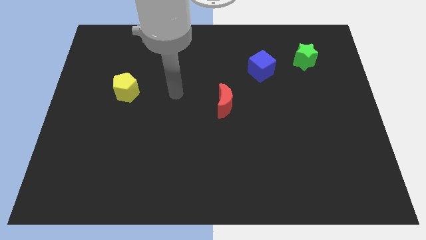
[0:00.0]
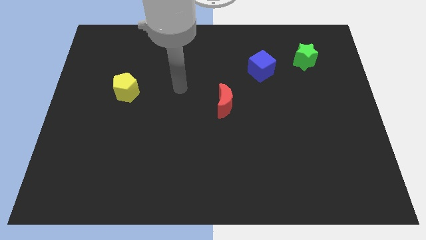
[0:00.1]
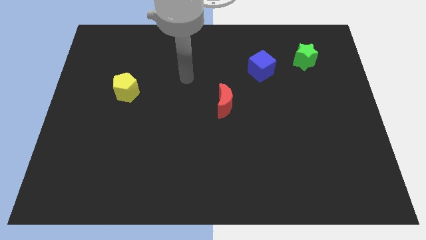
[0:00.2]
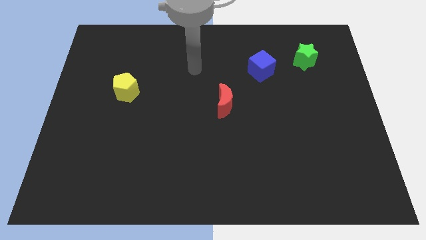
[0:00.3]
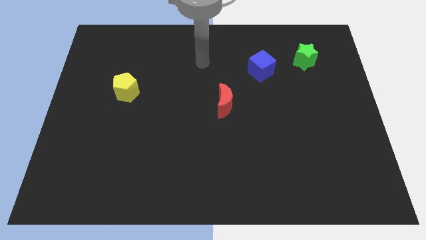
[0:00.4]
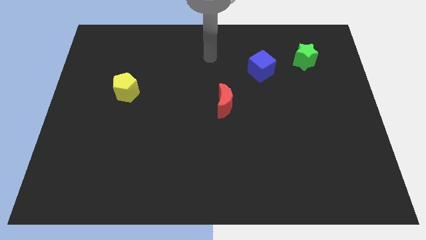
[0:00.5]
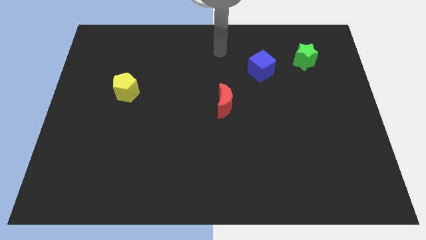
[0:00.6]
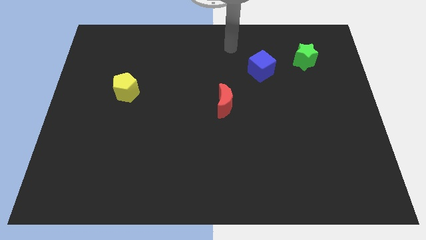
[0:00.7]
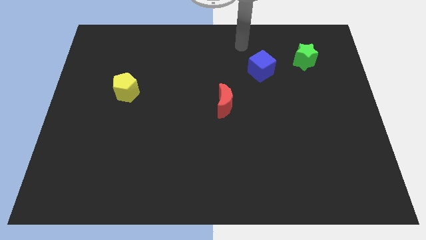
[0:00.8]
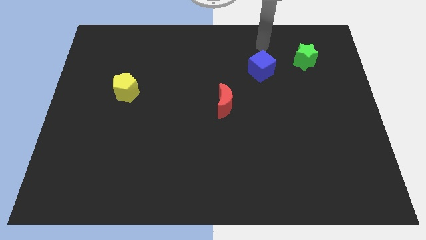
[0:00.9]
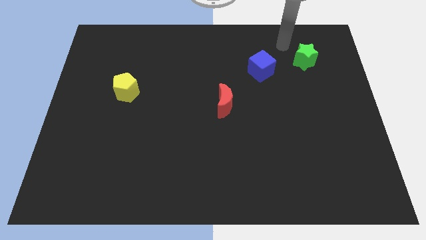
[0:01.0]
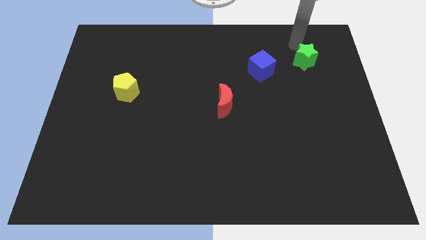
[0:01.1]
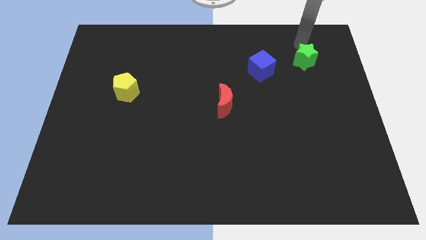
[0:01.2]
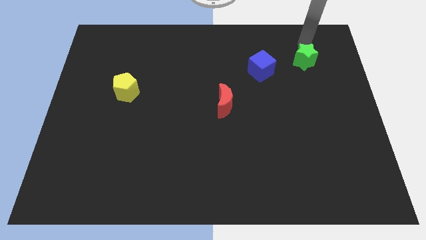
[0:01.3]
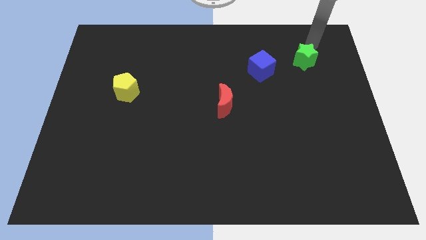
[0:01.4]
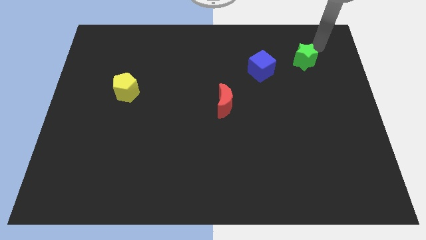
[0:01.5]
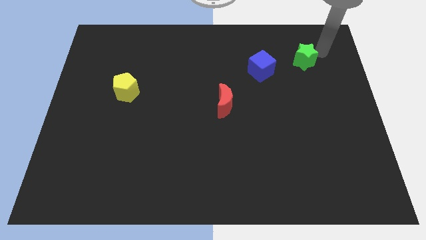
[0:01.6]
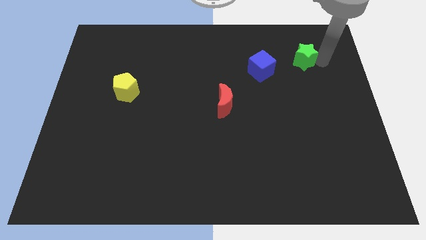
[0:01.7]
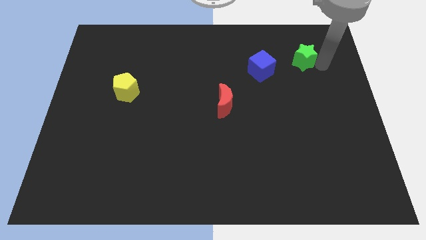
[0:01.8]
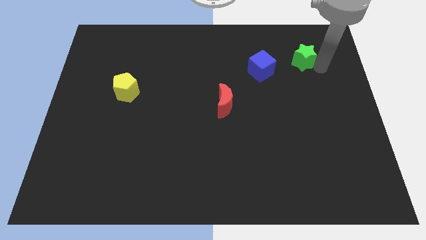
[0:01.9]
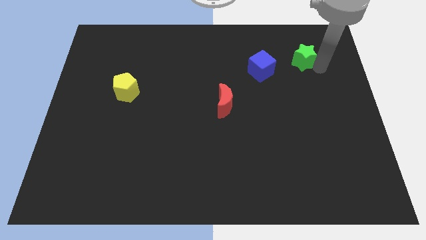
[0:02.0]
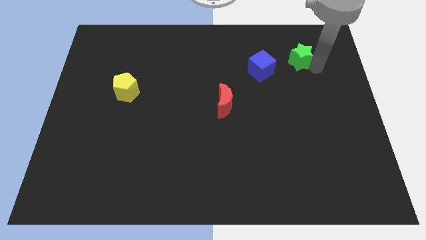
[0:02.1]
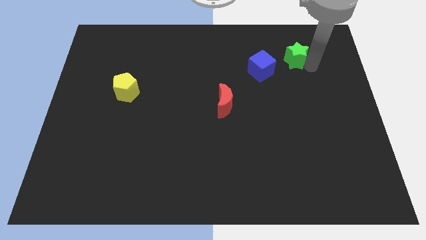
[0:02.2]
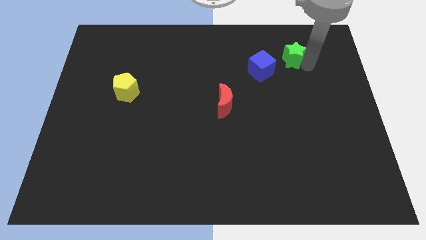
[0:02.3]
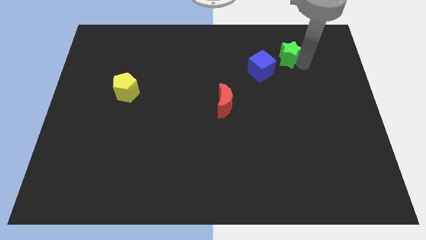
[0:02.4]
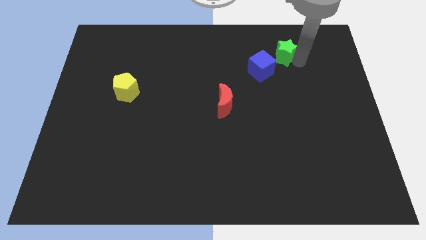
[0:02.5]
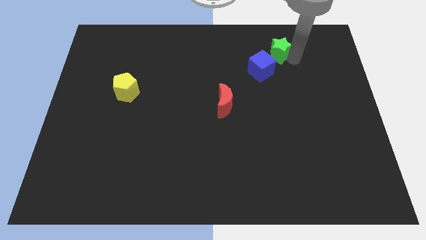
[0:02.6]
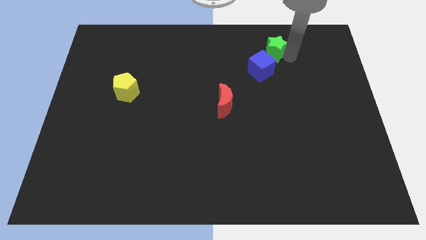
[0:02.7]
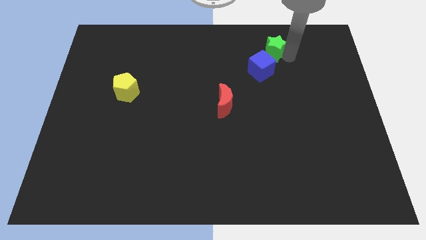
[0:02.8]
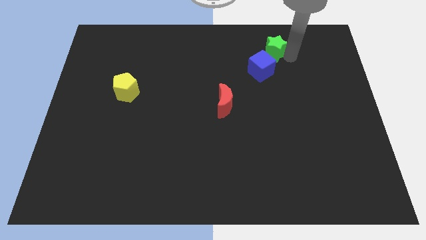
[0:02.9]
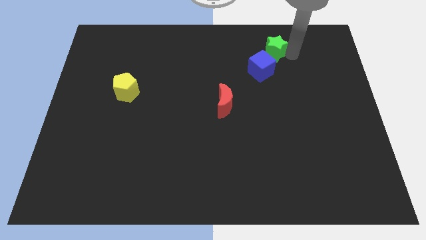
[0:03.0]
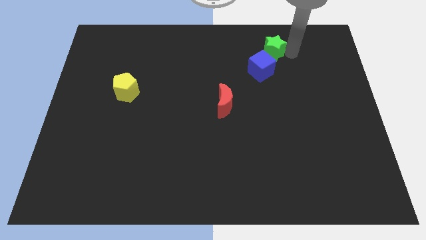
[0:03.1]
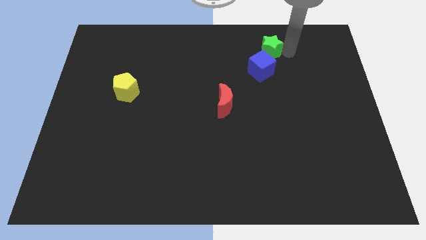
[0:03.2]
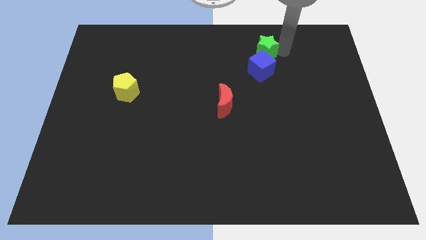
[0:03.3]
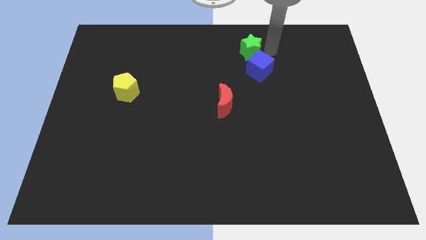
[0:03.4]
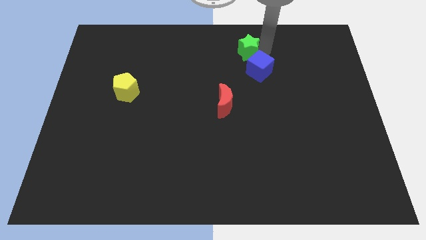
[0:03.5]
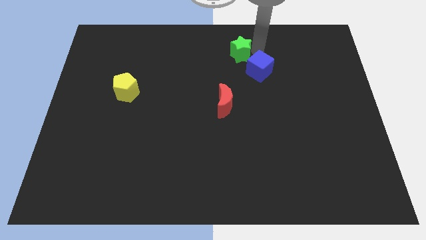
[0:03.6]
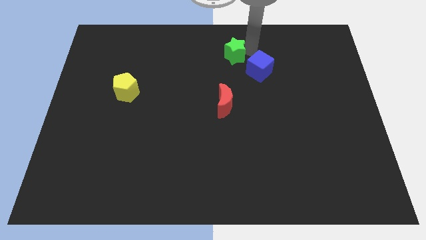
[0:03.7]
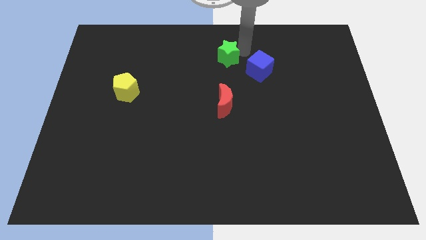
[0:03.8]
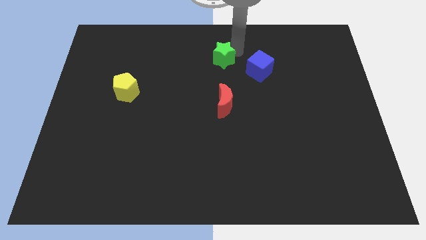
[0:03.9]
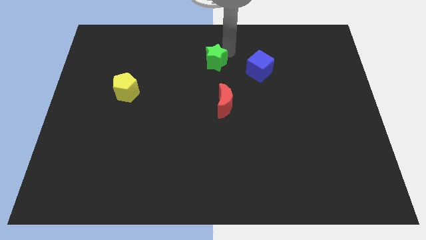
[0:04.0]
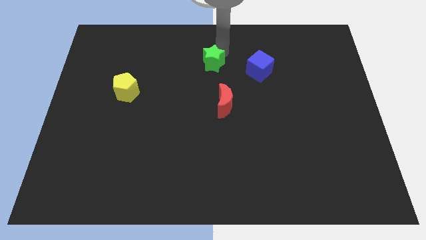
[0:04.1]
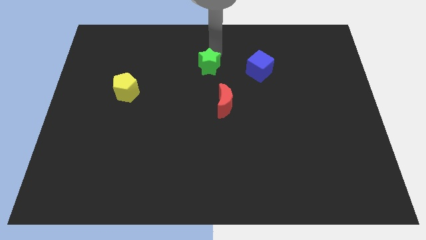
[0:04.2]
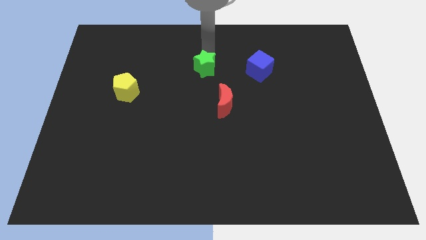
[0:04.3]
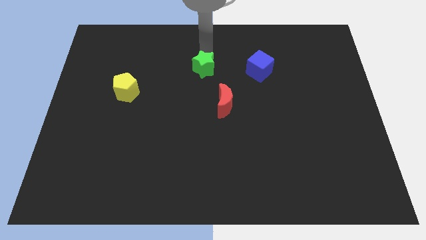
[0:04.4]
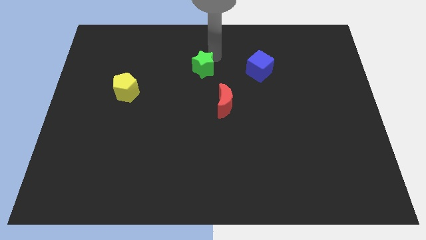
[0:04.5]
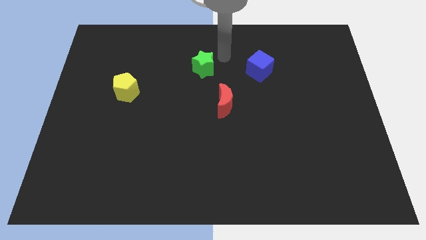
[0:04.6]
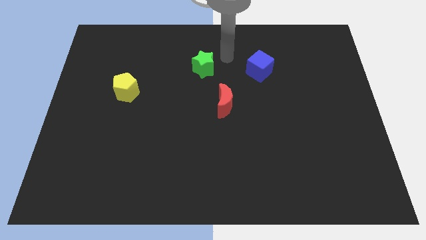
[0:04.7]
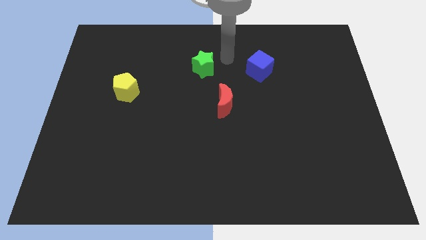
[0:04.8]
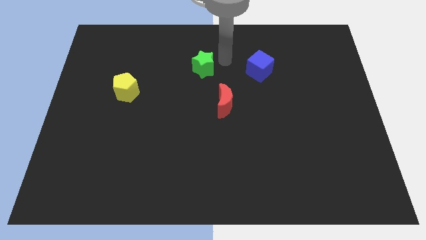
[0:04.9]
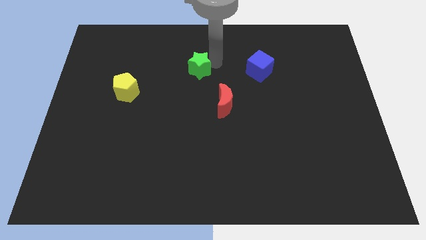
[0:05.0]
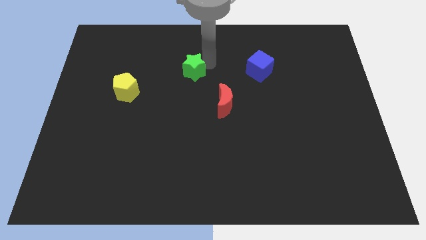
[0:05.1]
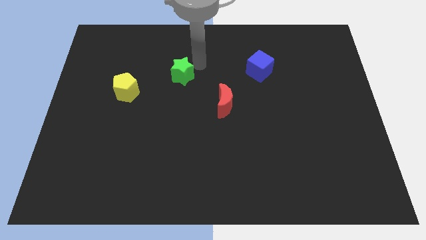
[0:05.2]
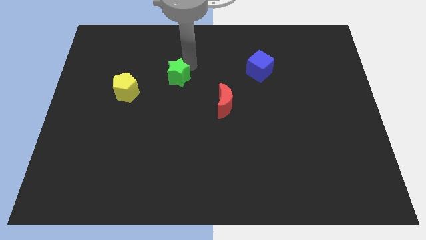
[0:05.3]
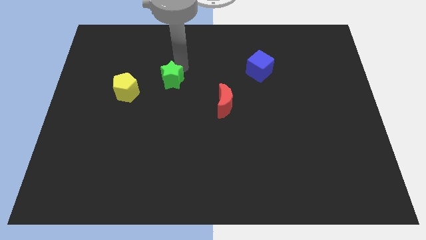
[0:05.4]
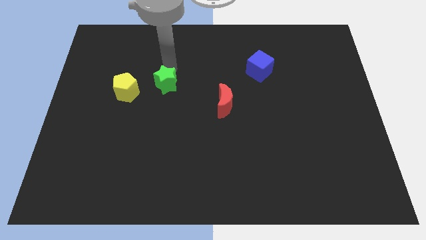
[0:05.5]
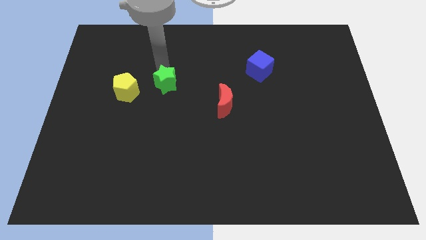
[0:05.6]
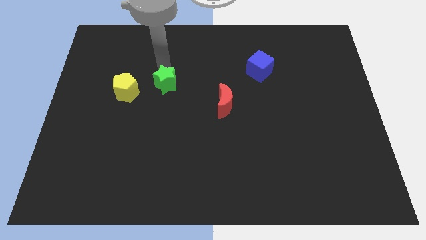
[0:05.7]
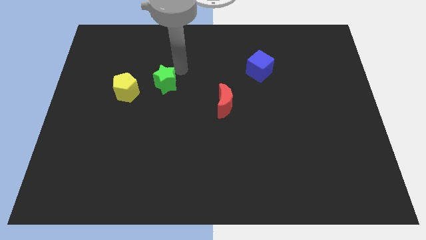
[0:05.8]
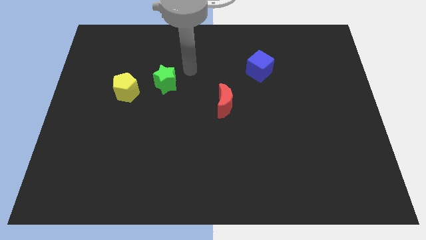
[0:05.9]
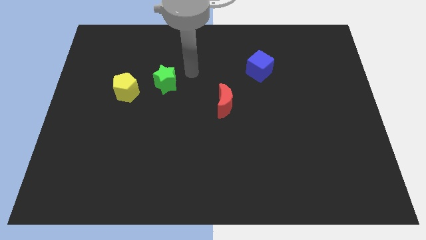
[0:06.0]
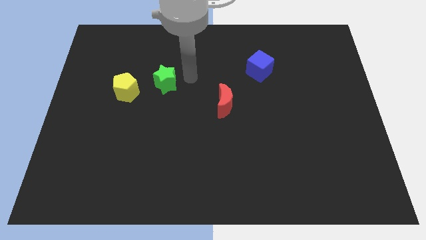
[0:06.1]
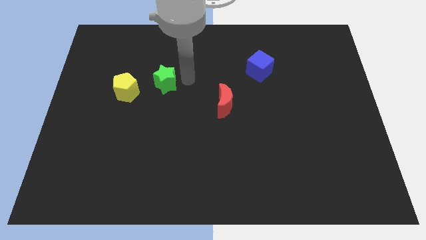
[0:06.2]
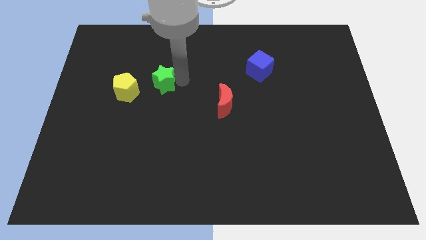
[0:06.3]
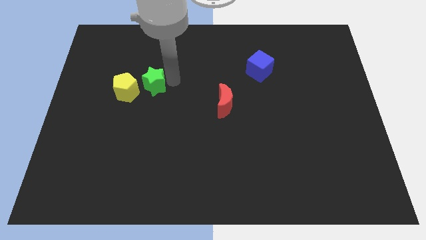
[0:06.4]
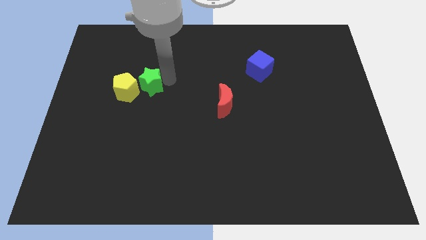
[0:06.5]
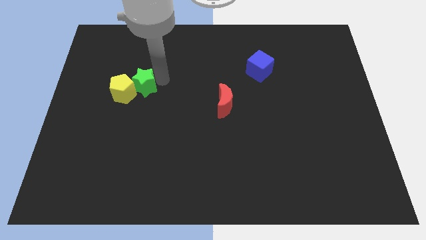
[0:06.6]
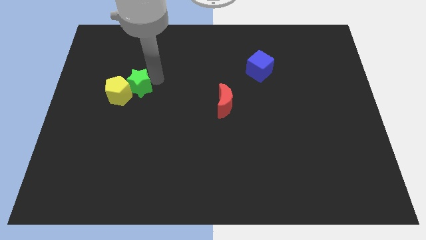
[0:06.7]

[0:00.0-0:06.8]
slide the green star towards the yellow pentagon

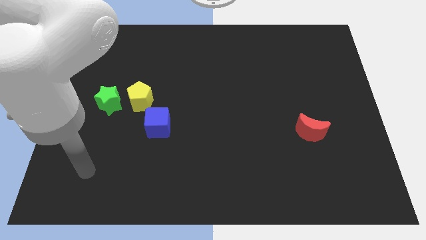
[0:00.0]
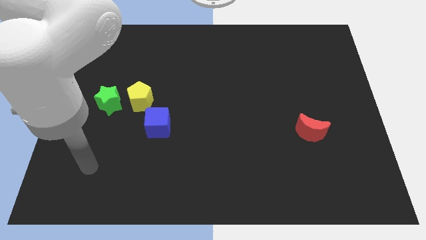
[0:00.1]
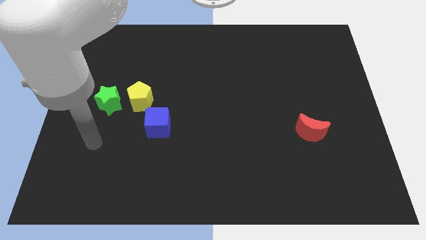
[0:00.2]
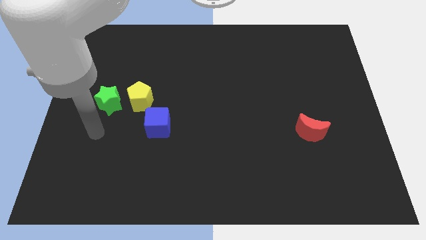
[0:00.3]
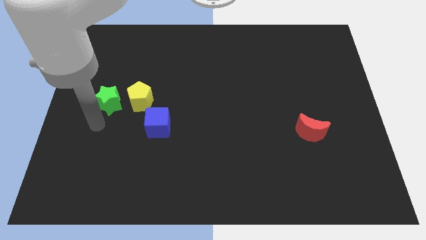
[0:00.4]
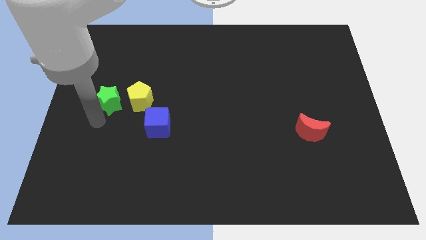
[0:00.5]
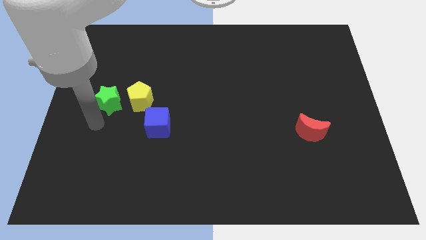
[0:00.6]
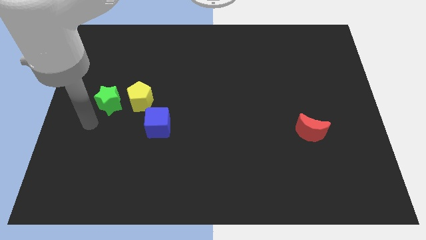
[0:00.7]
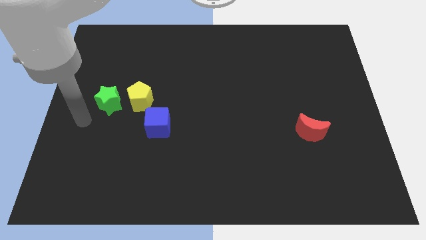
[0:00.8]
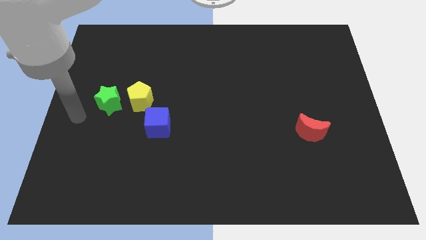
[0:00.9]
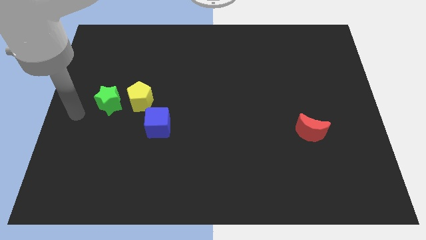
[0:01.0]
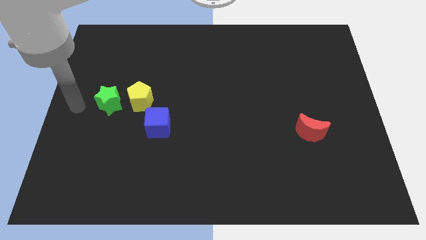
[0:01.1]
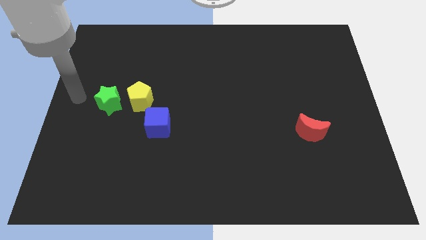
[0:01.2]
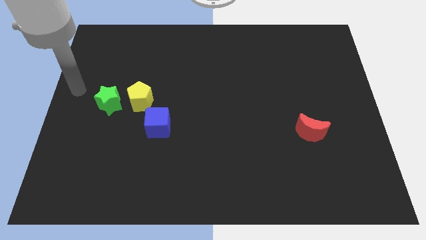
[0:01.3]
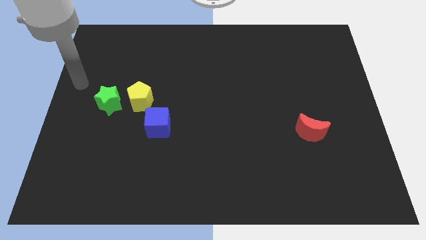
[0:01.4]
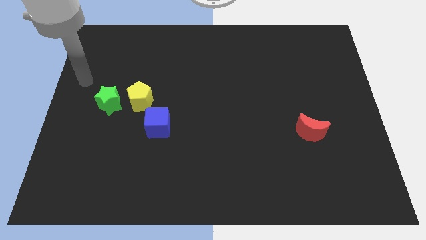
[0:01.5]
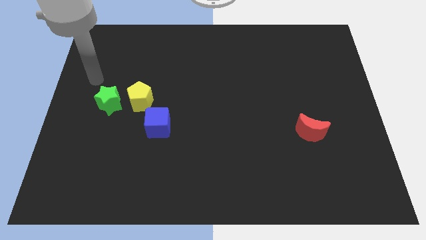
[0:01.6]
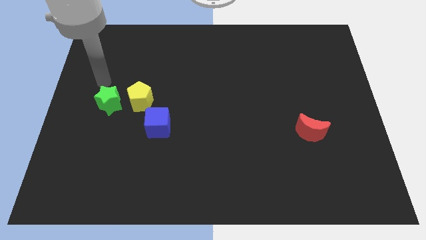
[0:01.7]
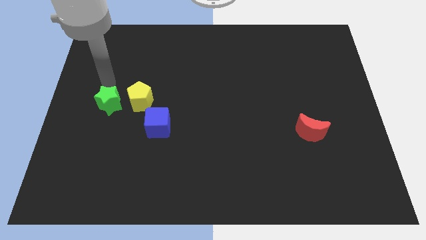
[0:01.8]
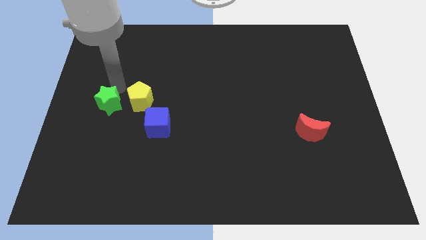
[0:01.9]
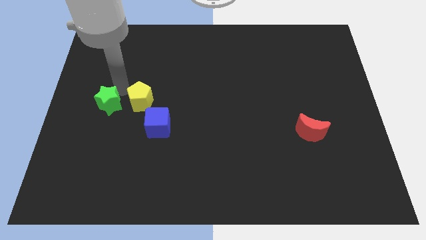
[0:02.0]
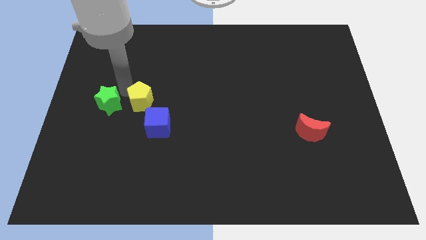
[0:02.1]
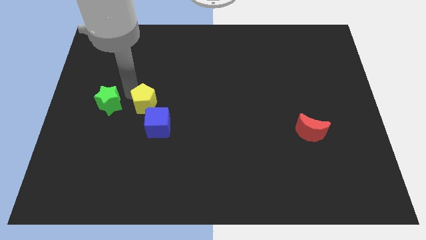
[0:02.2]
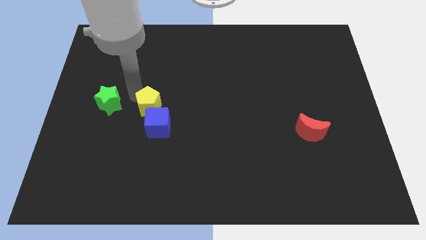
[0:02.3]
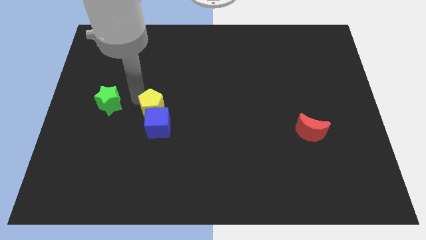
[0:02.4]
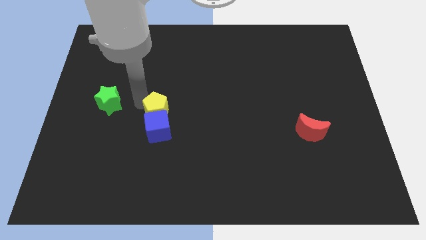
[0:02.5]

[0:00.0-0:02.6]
push the yellow block towards the cube
